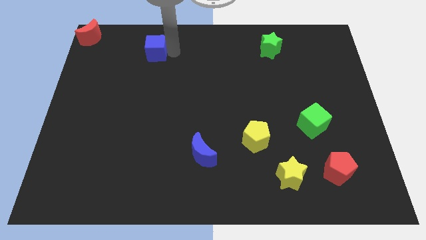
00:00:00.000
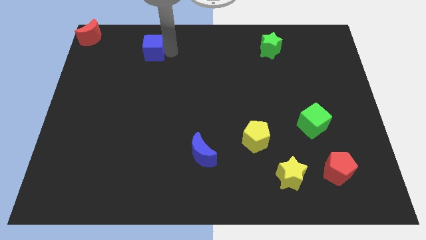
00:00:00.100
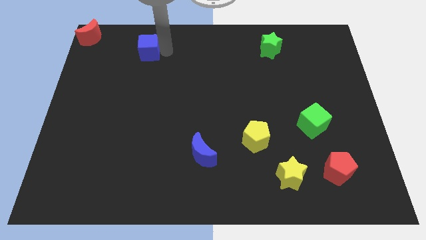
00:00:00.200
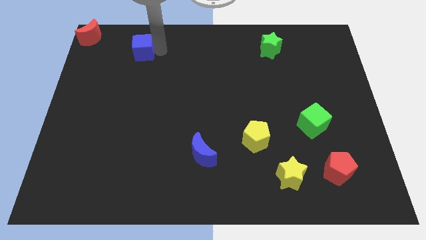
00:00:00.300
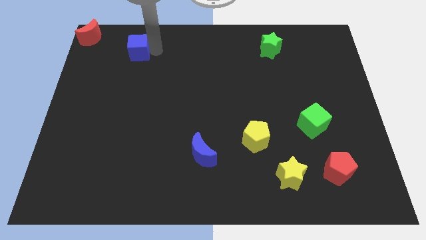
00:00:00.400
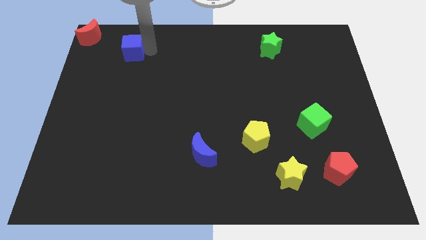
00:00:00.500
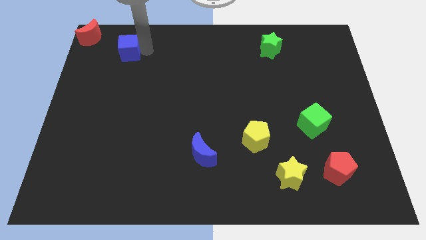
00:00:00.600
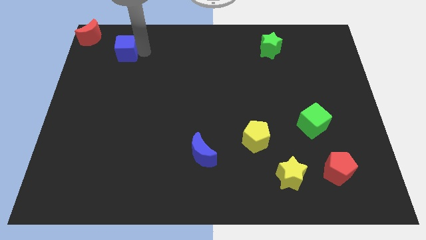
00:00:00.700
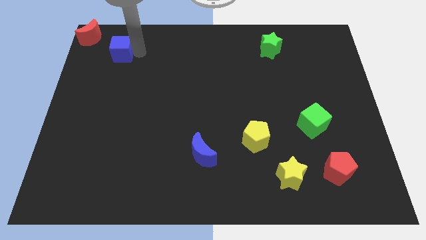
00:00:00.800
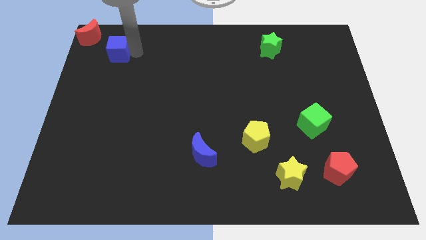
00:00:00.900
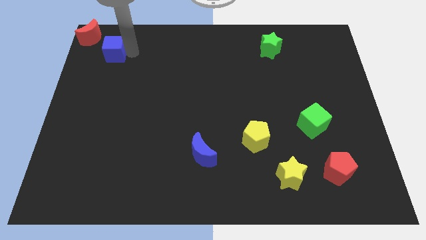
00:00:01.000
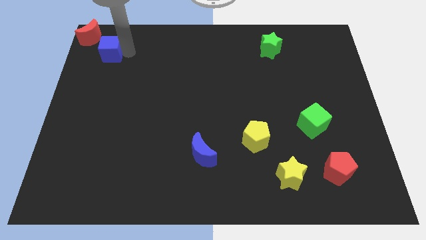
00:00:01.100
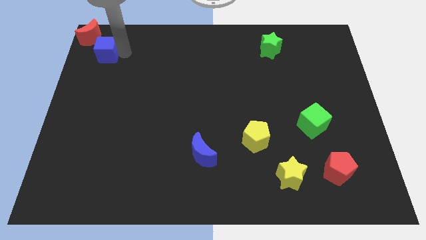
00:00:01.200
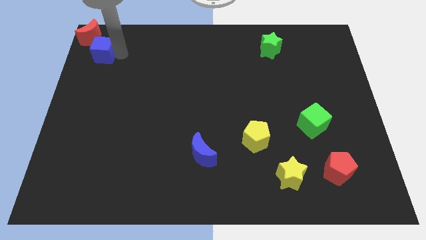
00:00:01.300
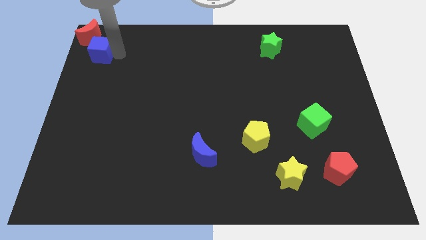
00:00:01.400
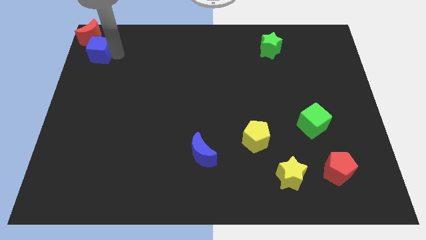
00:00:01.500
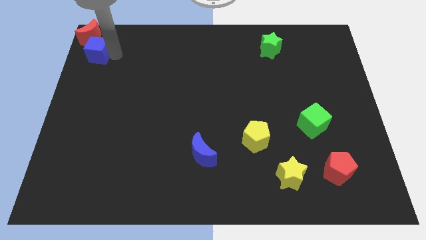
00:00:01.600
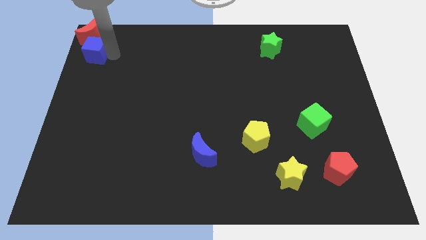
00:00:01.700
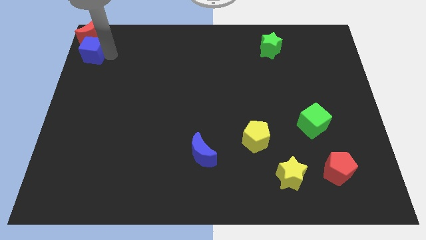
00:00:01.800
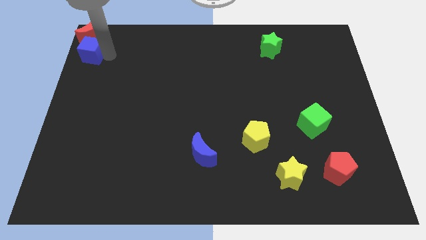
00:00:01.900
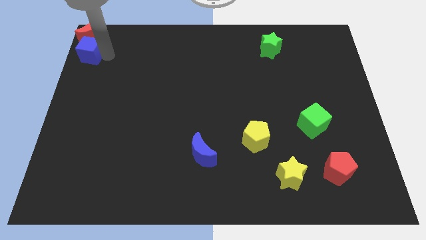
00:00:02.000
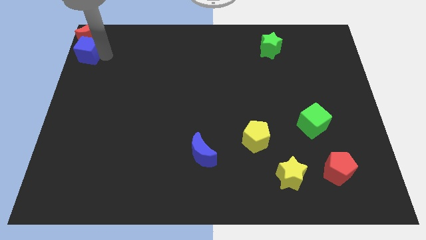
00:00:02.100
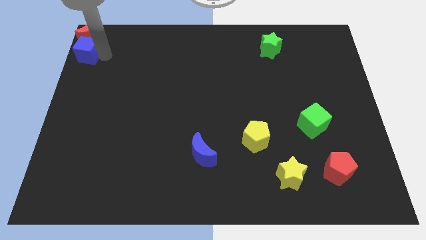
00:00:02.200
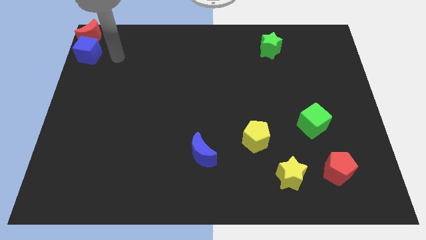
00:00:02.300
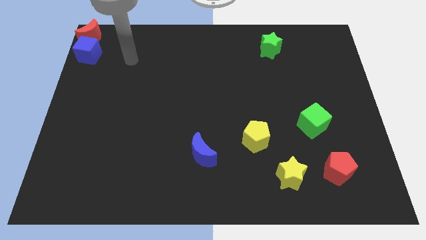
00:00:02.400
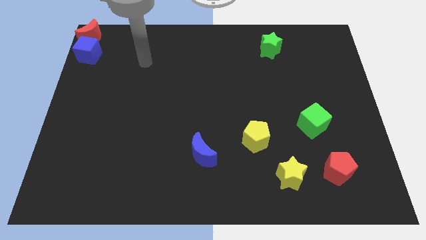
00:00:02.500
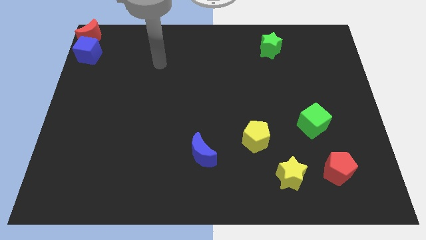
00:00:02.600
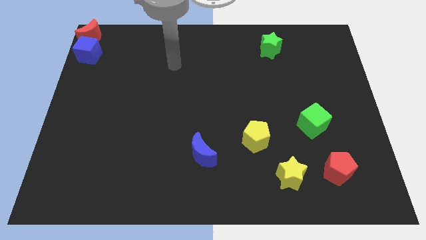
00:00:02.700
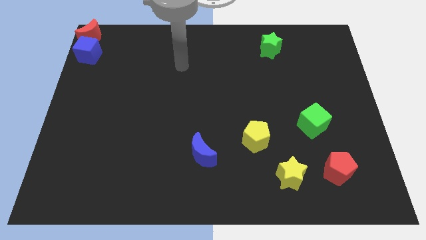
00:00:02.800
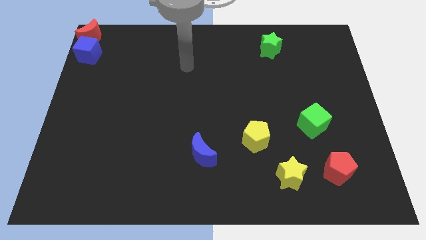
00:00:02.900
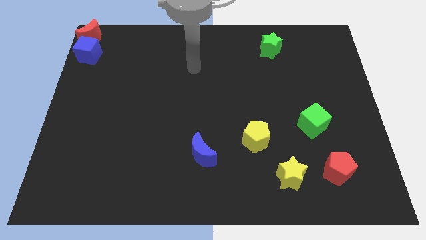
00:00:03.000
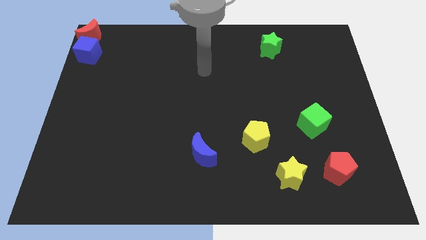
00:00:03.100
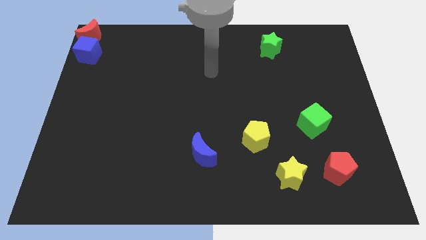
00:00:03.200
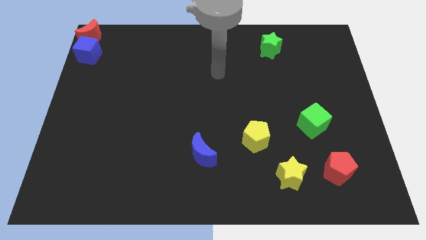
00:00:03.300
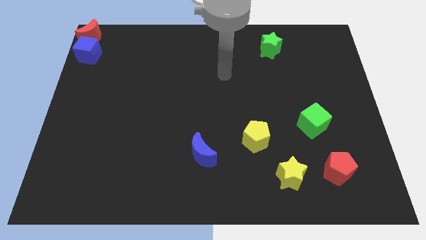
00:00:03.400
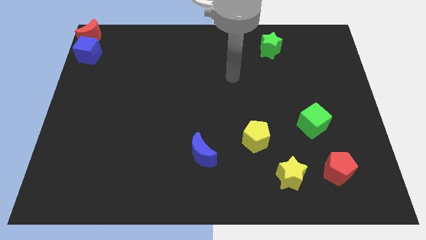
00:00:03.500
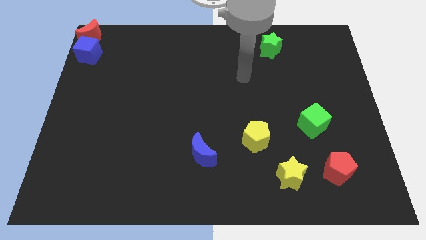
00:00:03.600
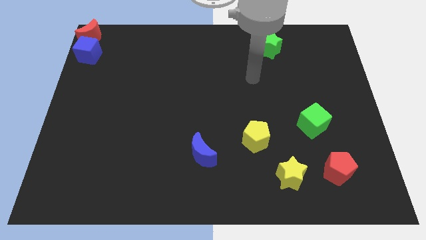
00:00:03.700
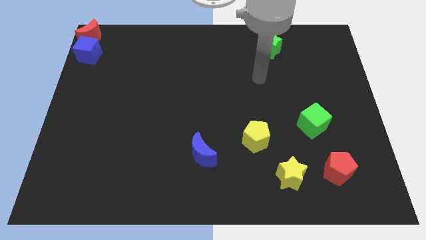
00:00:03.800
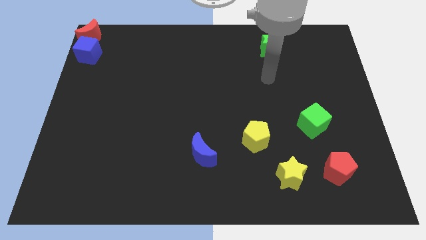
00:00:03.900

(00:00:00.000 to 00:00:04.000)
place the blue cube below the red moon

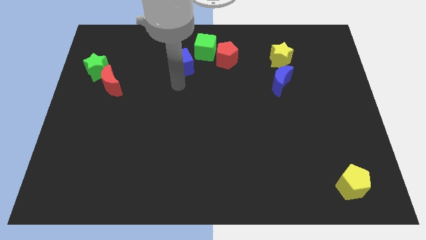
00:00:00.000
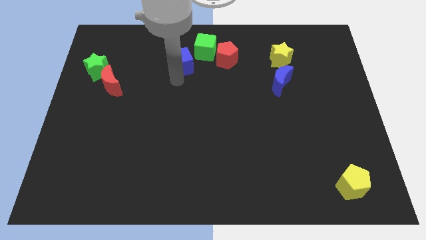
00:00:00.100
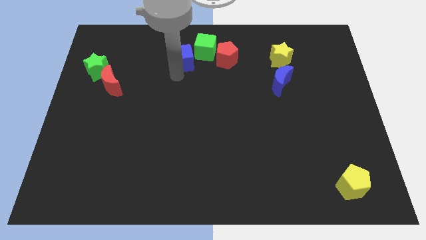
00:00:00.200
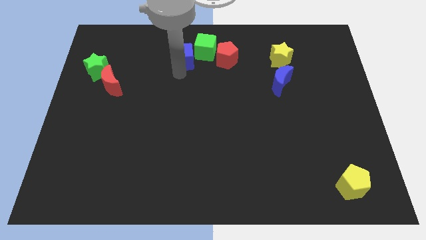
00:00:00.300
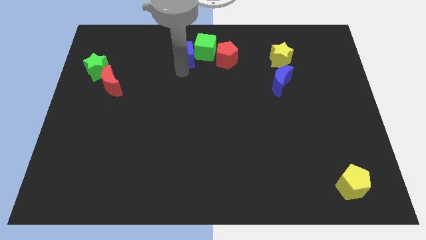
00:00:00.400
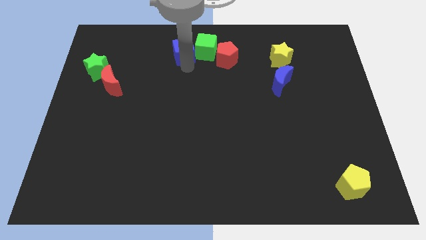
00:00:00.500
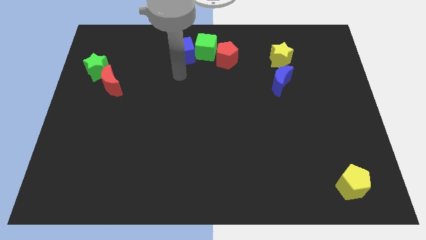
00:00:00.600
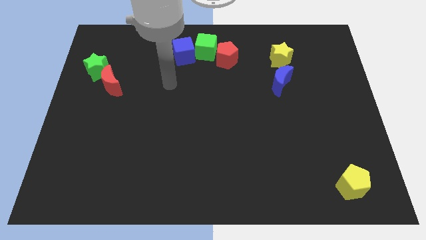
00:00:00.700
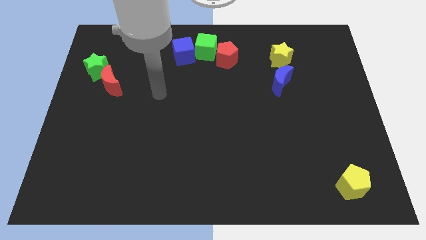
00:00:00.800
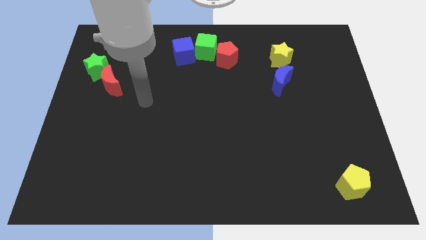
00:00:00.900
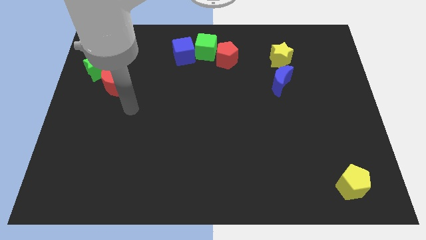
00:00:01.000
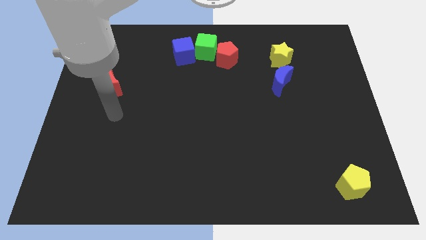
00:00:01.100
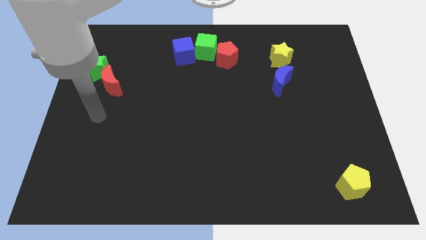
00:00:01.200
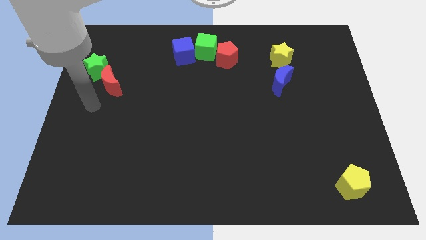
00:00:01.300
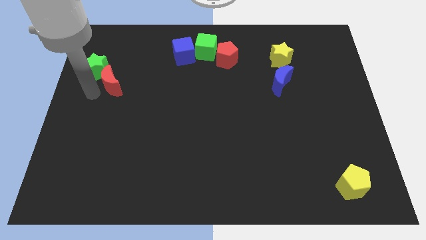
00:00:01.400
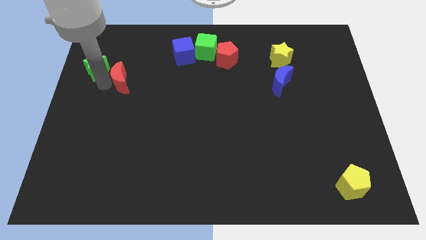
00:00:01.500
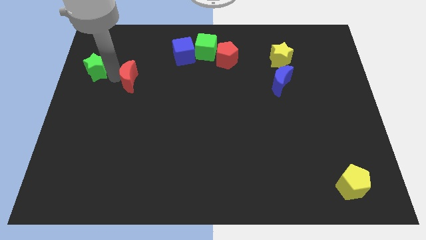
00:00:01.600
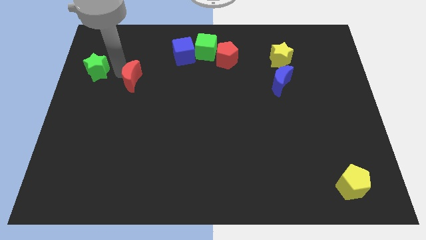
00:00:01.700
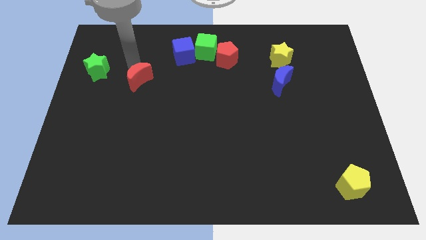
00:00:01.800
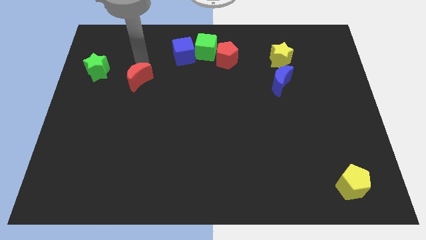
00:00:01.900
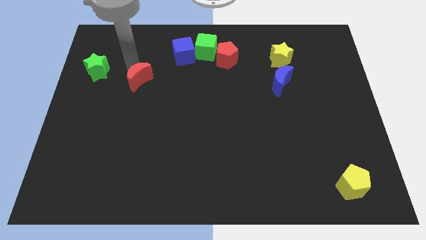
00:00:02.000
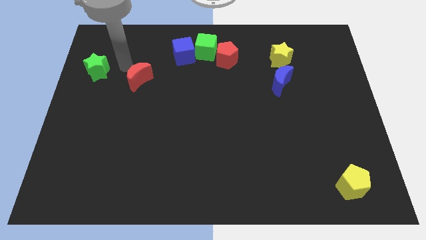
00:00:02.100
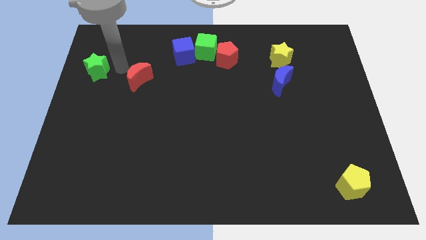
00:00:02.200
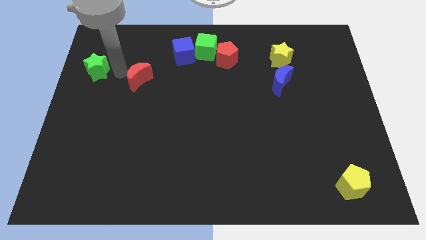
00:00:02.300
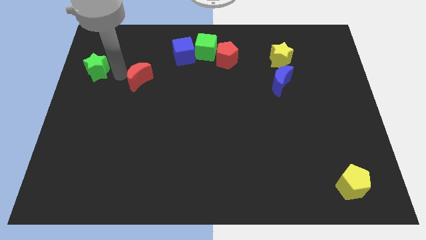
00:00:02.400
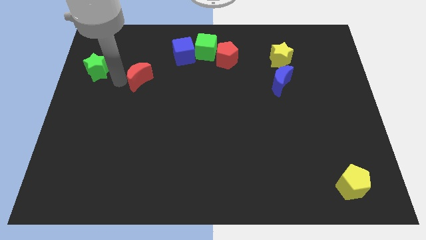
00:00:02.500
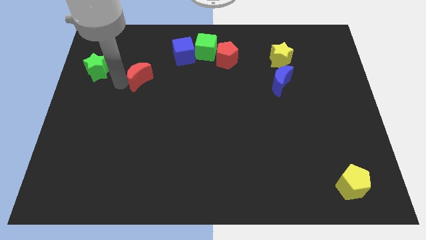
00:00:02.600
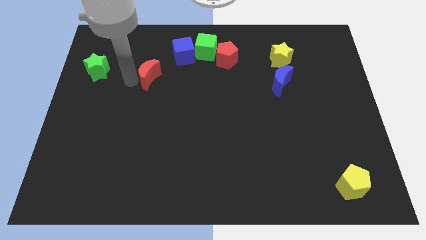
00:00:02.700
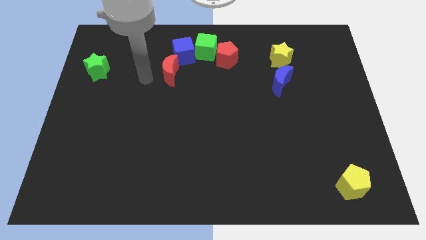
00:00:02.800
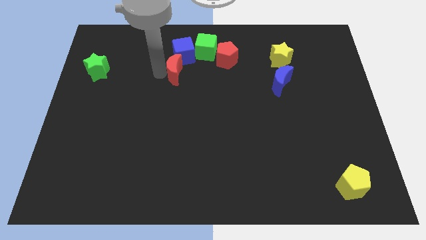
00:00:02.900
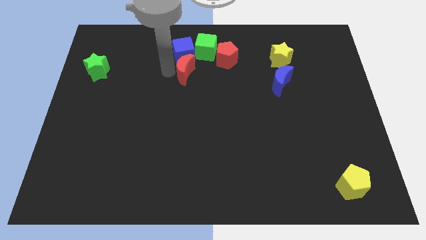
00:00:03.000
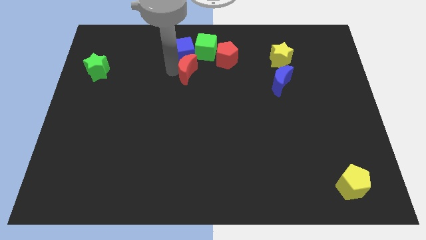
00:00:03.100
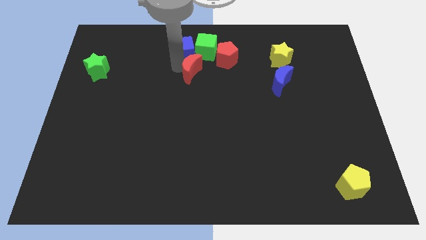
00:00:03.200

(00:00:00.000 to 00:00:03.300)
place the blue cube bottom left of the green cube

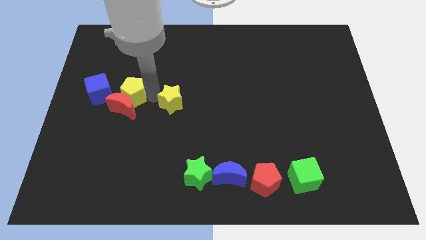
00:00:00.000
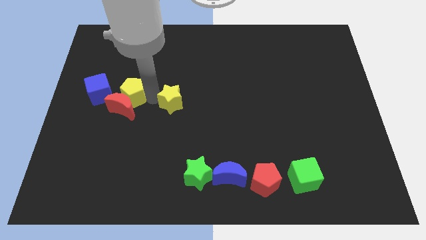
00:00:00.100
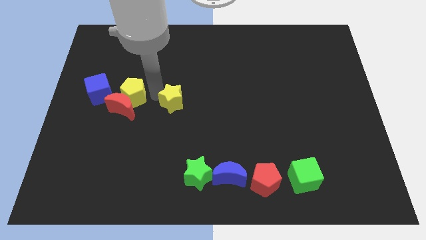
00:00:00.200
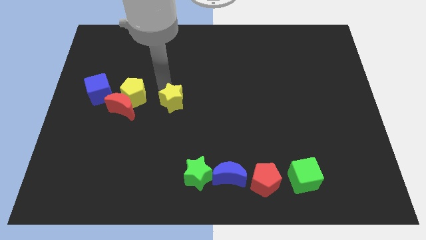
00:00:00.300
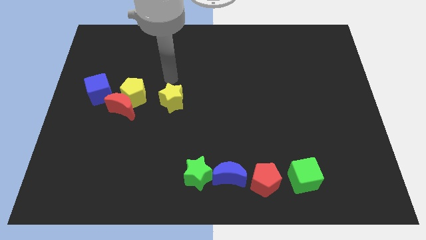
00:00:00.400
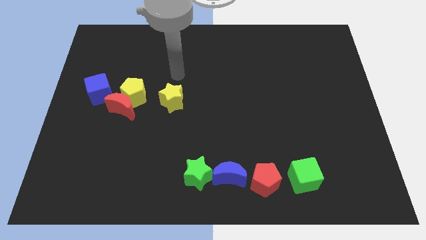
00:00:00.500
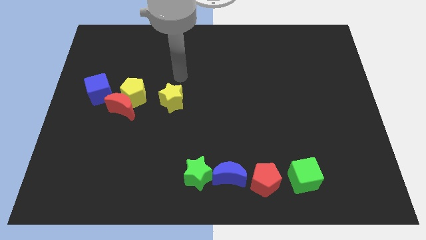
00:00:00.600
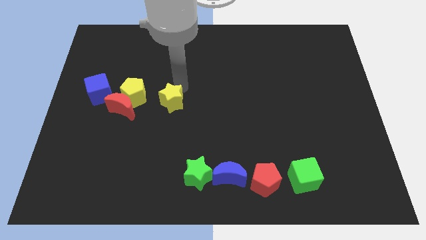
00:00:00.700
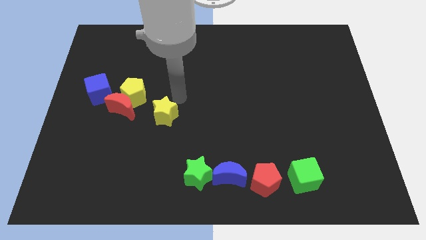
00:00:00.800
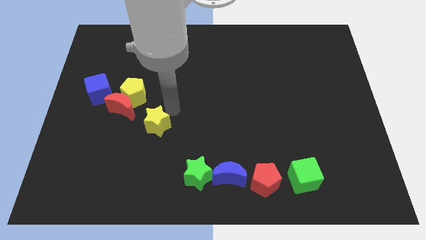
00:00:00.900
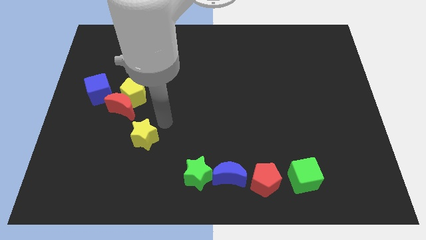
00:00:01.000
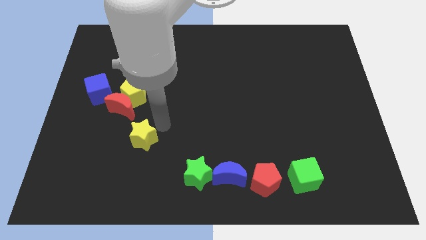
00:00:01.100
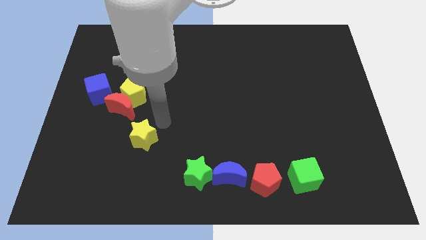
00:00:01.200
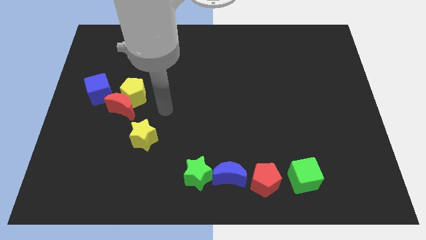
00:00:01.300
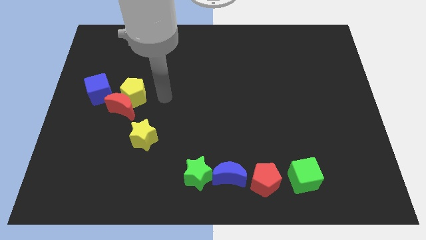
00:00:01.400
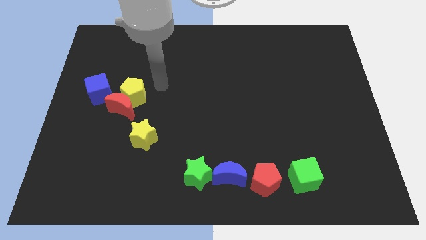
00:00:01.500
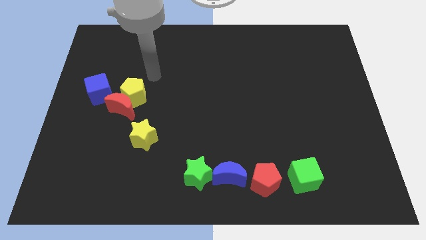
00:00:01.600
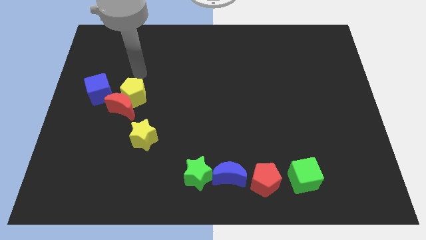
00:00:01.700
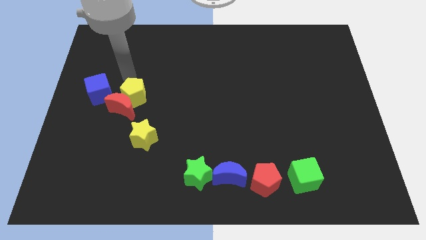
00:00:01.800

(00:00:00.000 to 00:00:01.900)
put the yellow star between the red moon and green star
